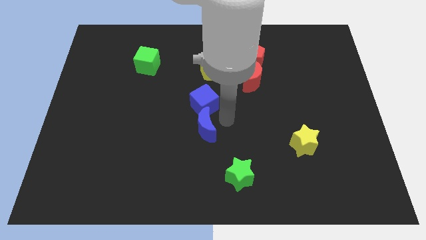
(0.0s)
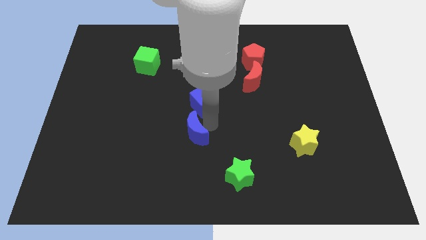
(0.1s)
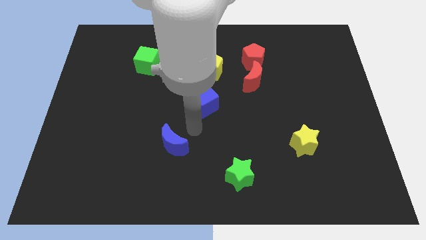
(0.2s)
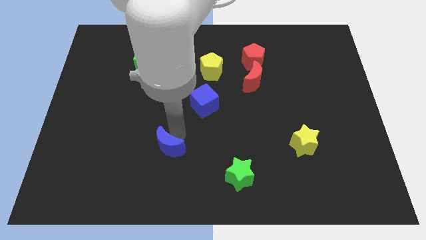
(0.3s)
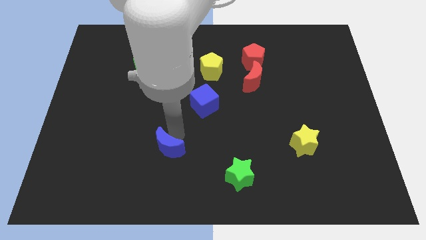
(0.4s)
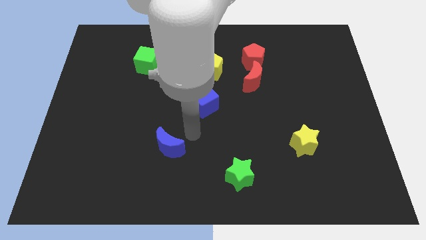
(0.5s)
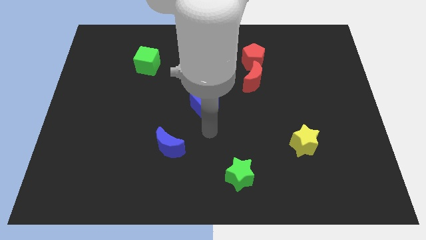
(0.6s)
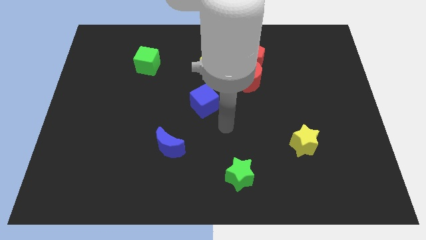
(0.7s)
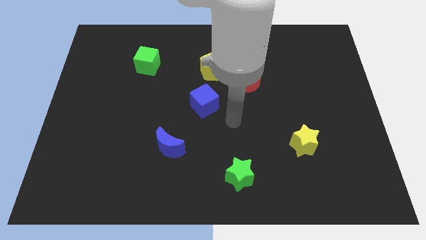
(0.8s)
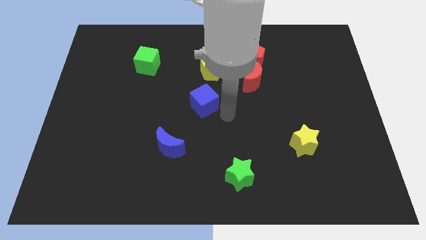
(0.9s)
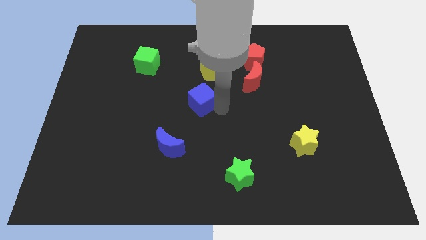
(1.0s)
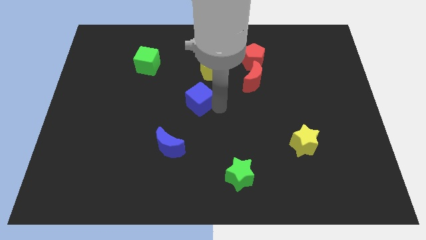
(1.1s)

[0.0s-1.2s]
separate the blue moon and blue cube

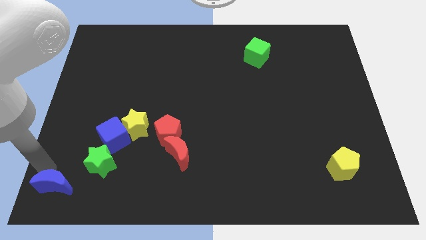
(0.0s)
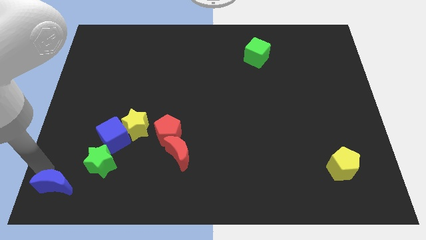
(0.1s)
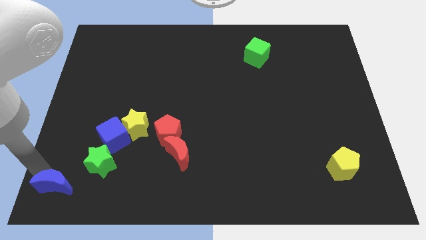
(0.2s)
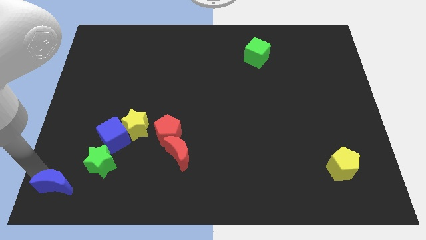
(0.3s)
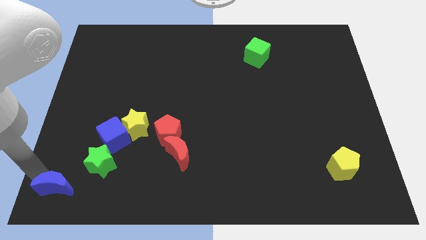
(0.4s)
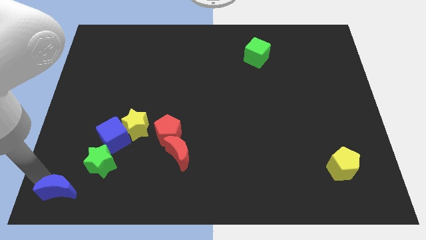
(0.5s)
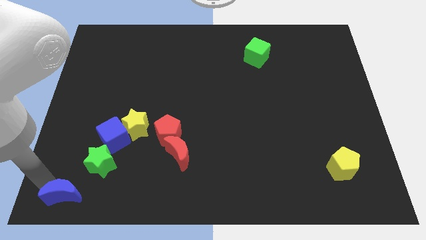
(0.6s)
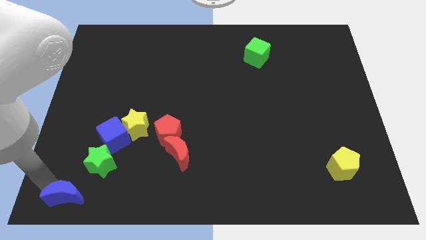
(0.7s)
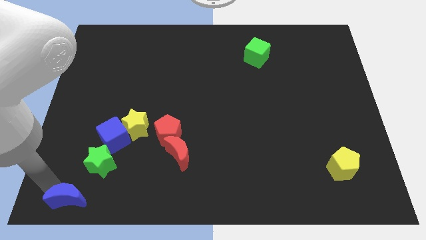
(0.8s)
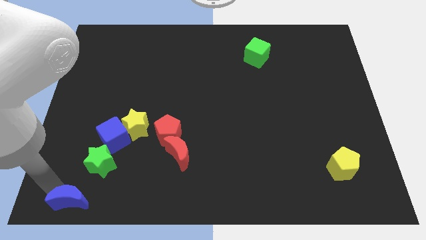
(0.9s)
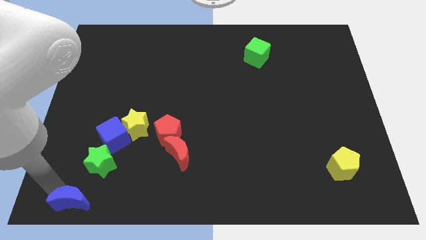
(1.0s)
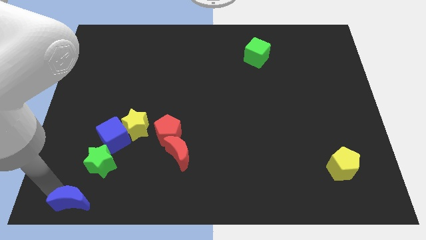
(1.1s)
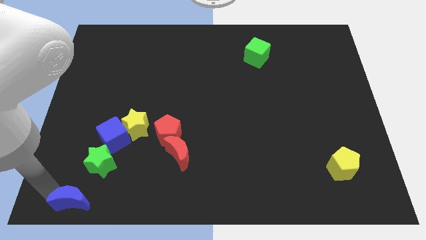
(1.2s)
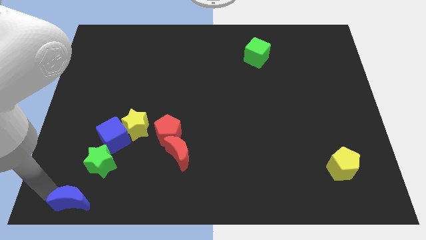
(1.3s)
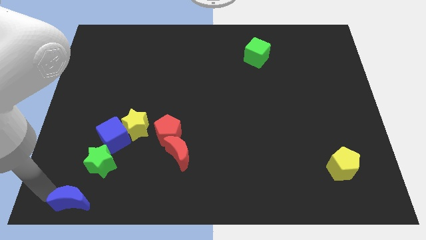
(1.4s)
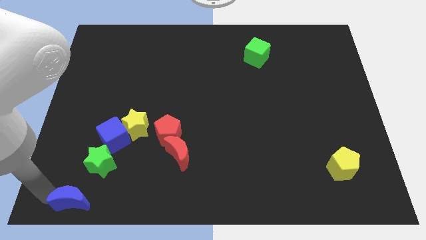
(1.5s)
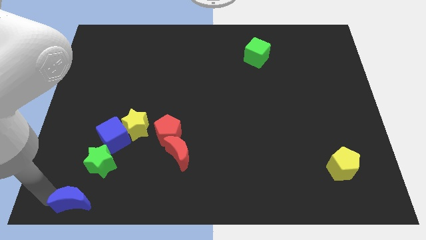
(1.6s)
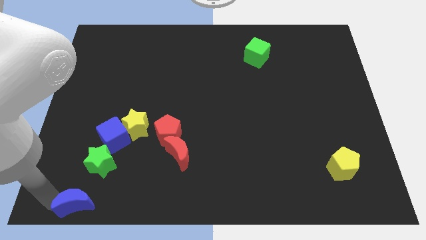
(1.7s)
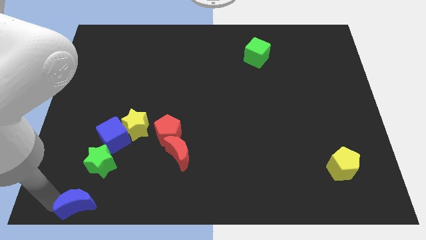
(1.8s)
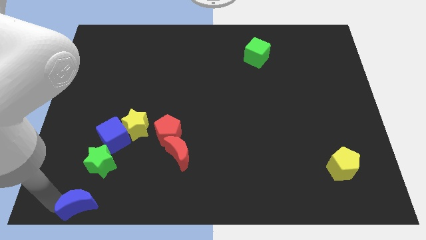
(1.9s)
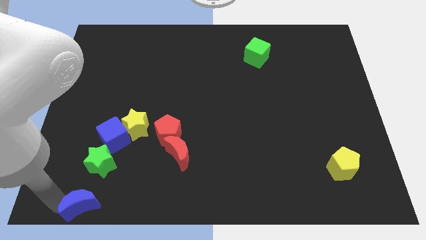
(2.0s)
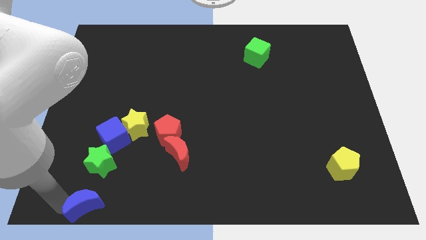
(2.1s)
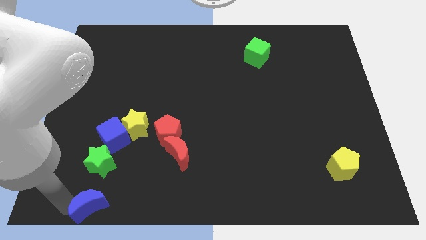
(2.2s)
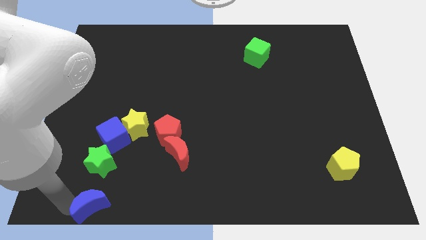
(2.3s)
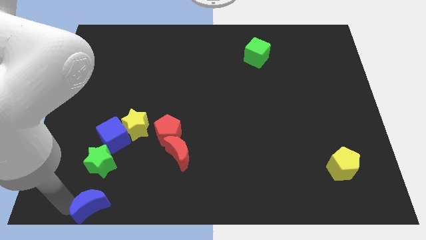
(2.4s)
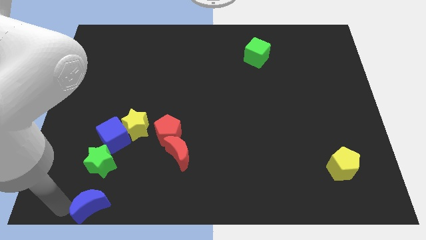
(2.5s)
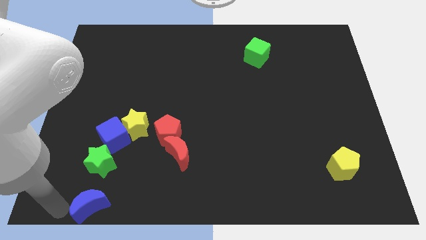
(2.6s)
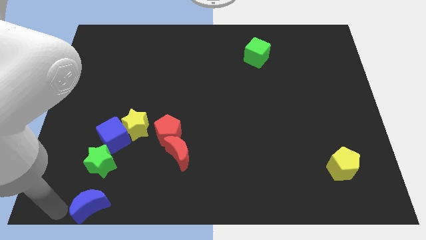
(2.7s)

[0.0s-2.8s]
push the blue crescent vertically to the bottom of the green star

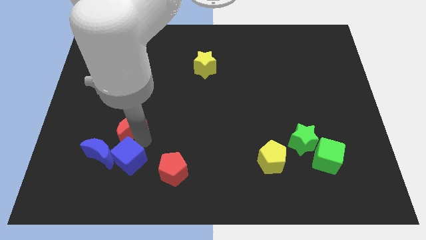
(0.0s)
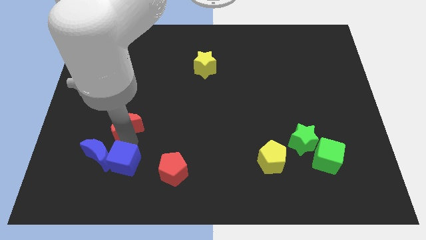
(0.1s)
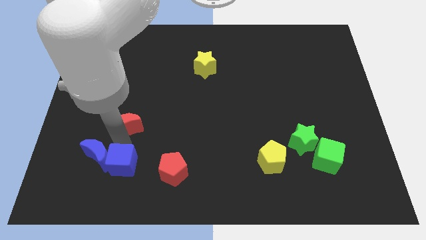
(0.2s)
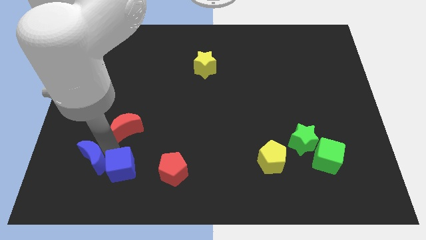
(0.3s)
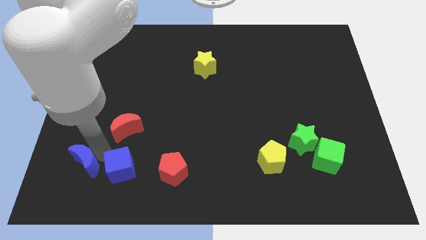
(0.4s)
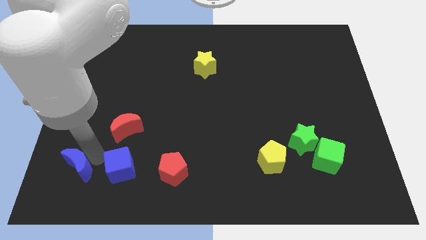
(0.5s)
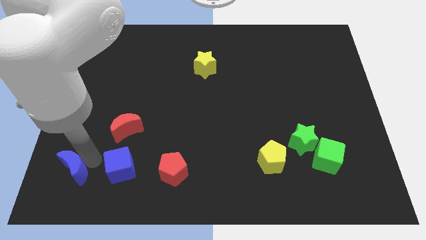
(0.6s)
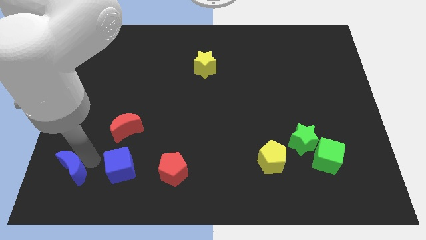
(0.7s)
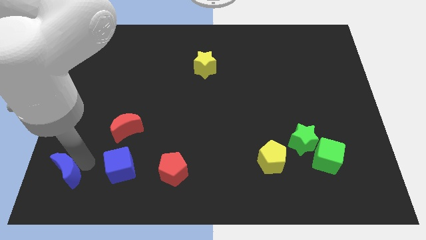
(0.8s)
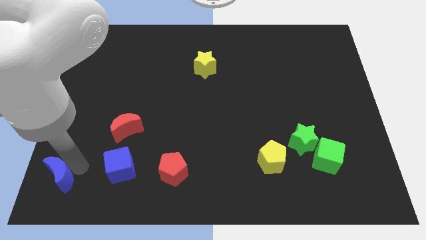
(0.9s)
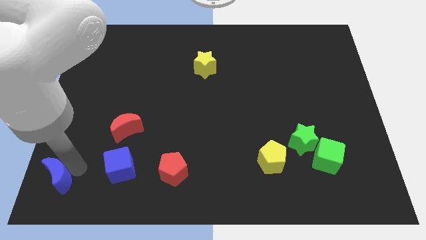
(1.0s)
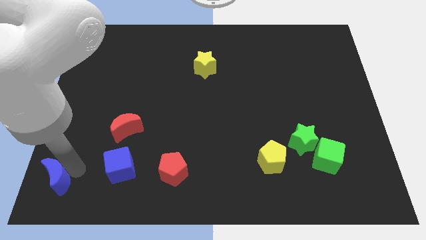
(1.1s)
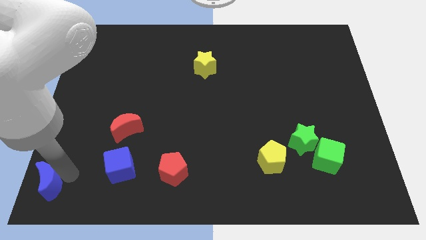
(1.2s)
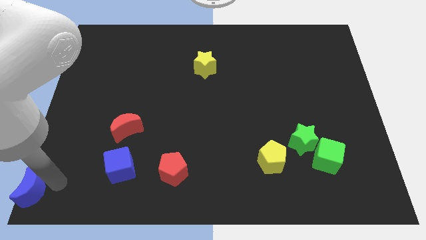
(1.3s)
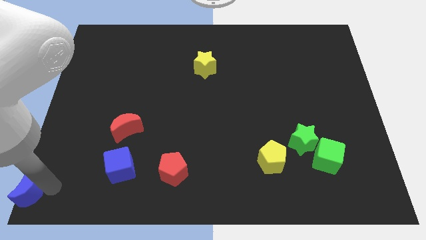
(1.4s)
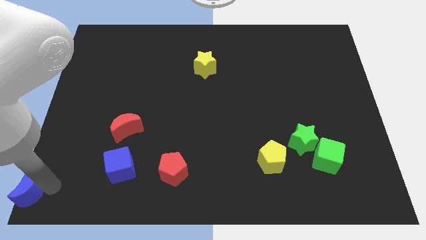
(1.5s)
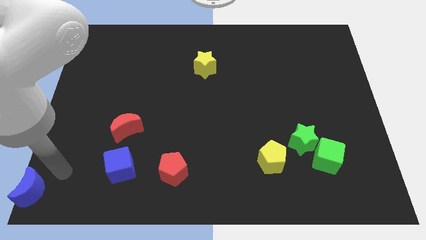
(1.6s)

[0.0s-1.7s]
place the blue crescent to the bottom left corner of the board

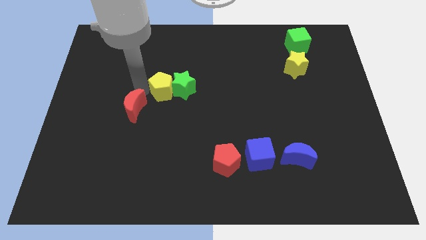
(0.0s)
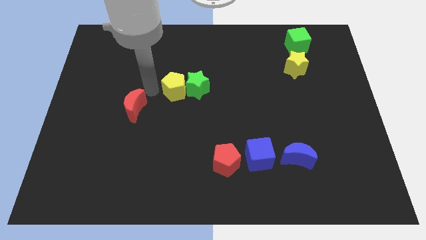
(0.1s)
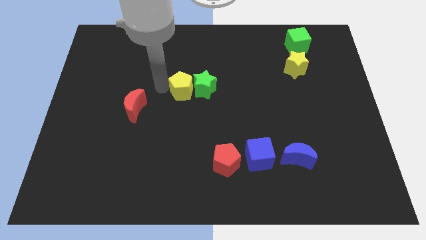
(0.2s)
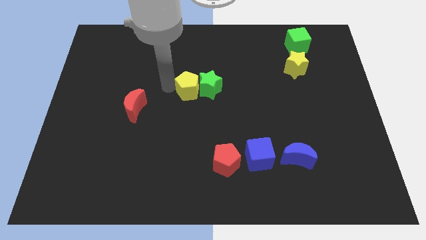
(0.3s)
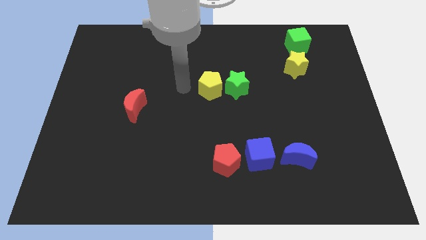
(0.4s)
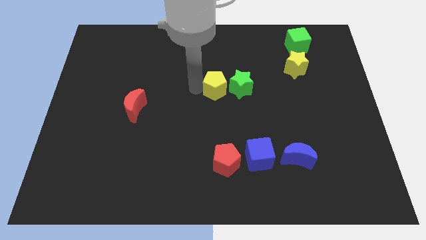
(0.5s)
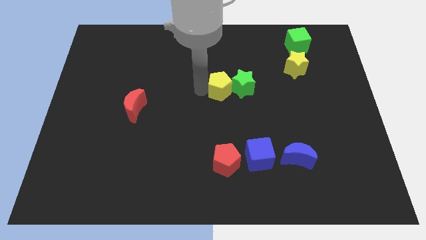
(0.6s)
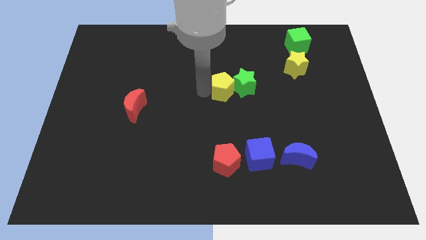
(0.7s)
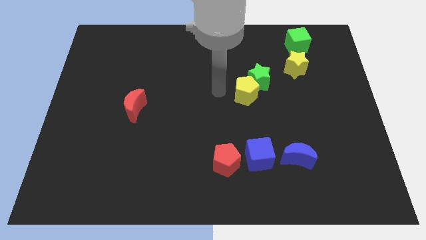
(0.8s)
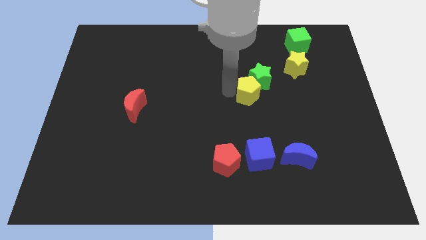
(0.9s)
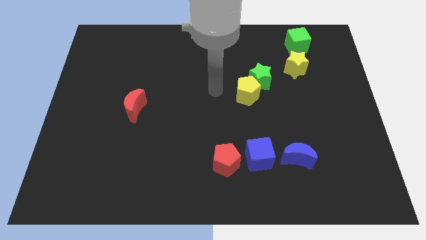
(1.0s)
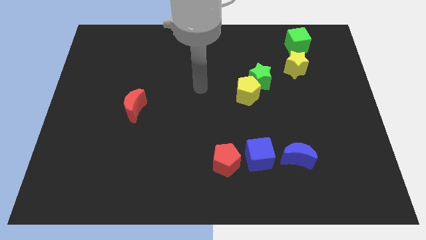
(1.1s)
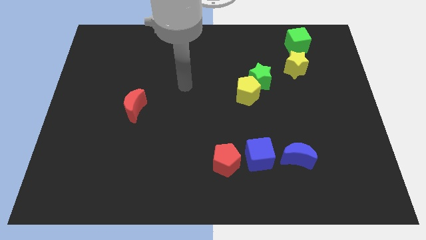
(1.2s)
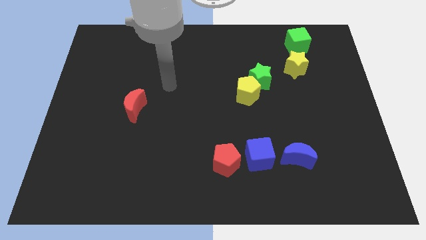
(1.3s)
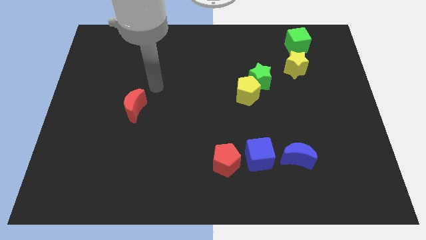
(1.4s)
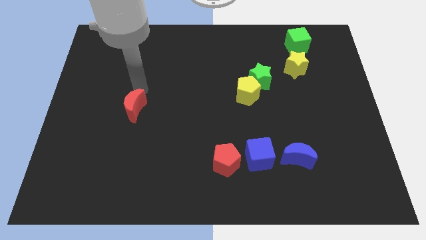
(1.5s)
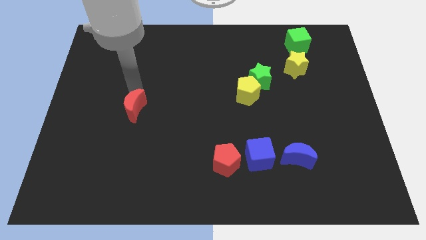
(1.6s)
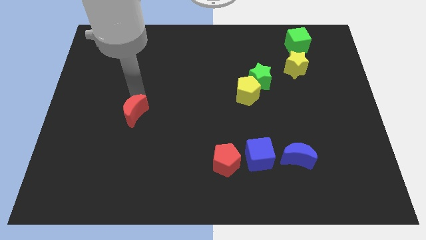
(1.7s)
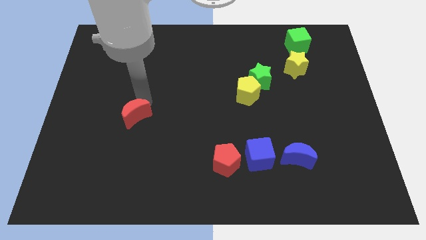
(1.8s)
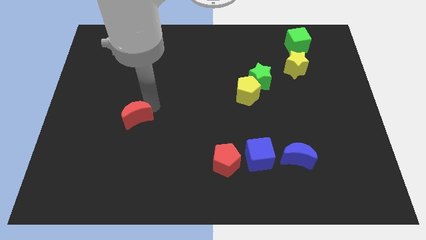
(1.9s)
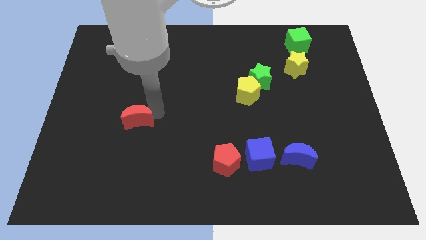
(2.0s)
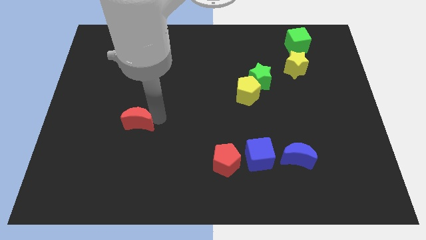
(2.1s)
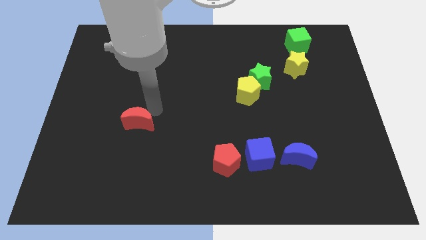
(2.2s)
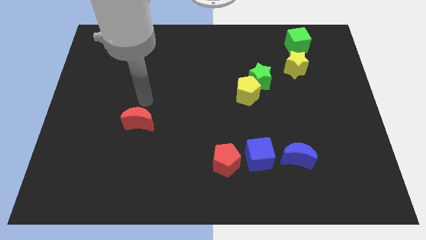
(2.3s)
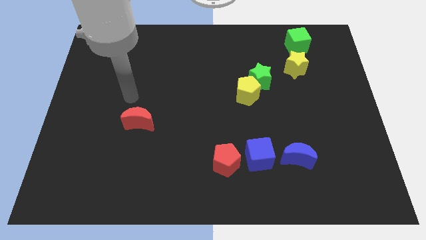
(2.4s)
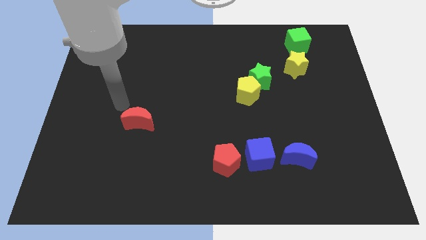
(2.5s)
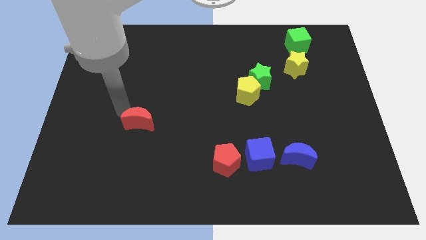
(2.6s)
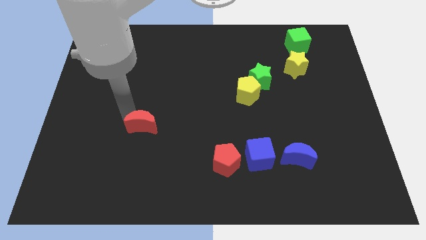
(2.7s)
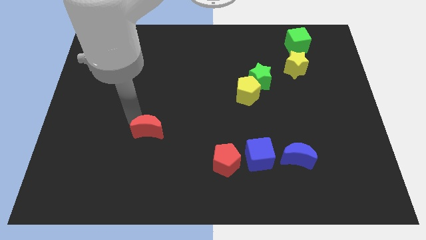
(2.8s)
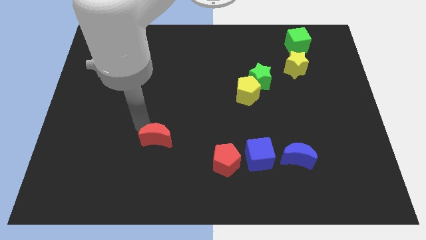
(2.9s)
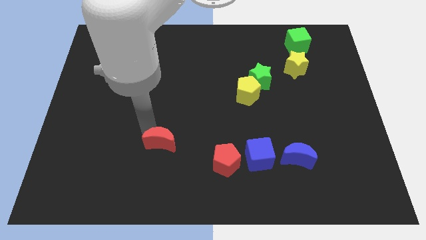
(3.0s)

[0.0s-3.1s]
move the red moon to the left side of the red pentagon

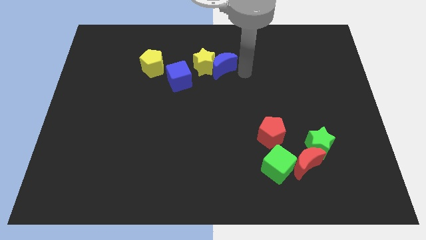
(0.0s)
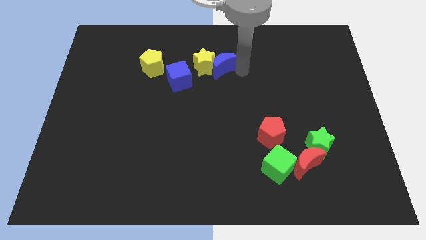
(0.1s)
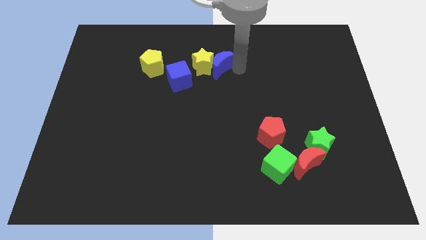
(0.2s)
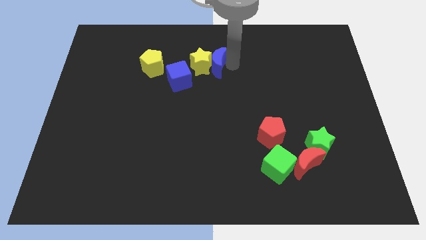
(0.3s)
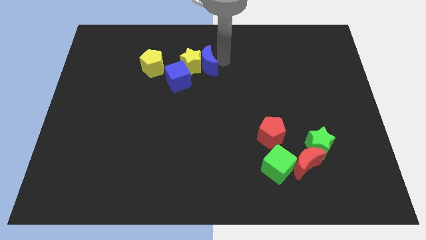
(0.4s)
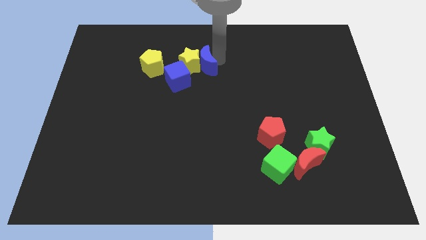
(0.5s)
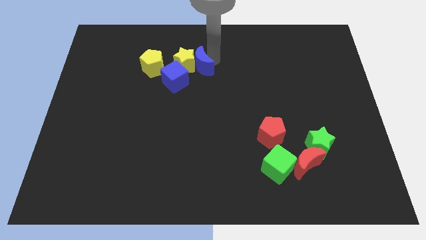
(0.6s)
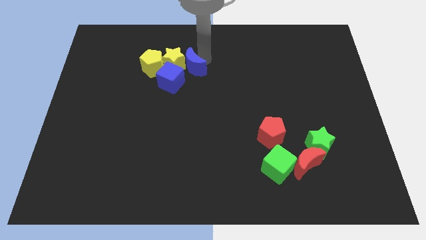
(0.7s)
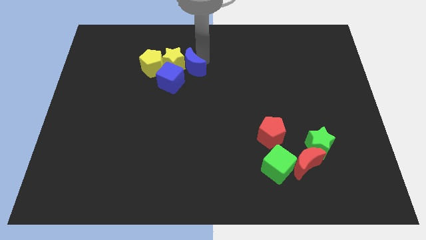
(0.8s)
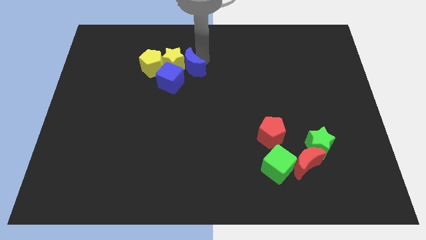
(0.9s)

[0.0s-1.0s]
push the blue crescent into the blue cube and yellow star
